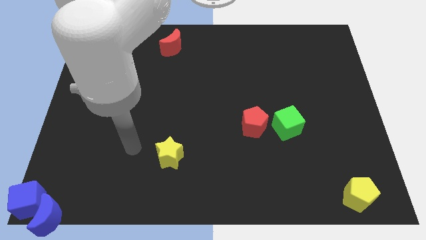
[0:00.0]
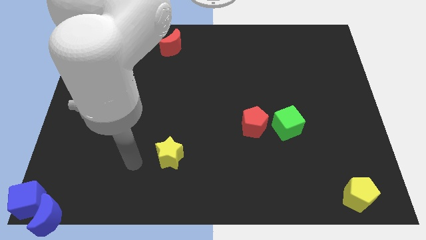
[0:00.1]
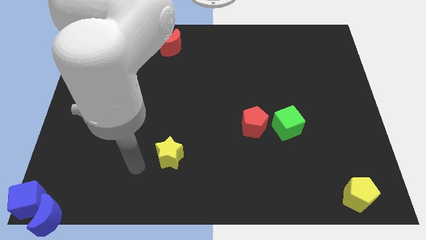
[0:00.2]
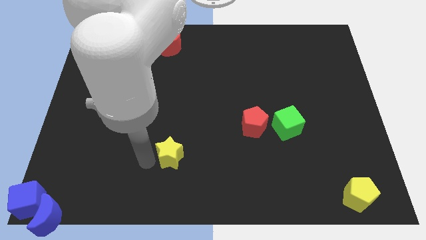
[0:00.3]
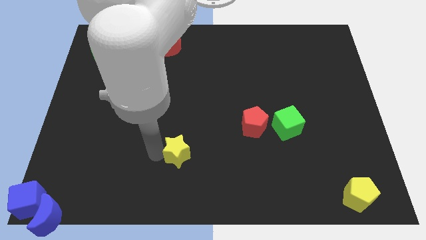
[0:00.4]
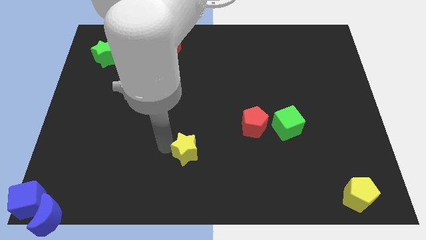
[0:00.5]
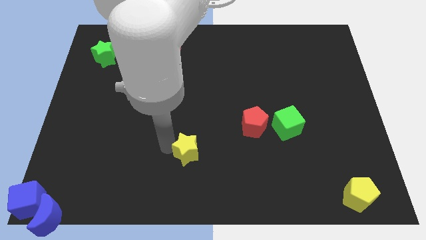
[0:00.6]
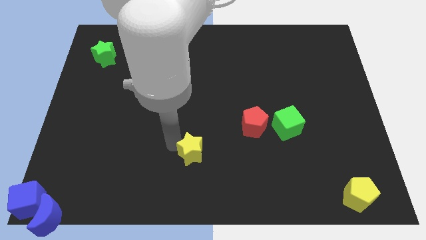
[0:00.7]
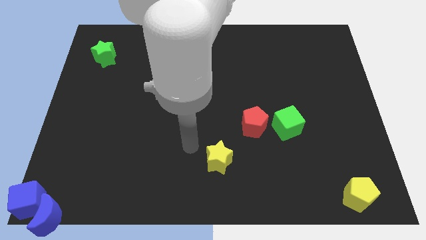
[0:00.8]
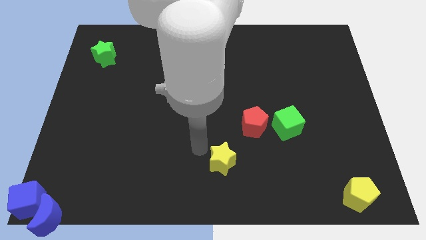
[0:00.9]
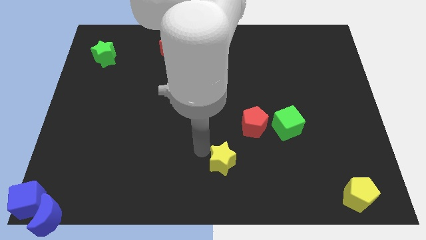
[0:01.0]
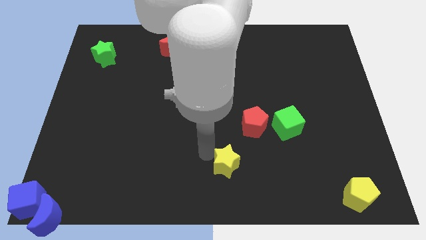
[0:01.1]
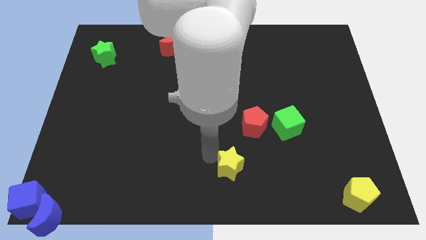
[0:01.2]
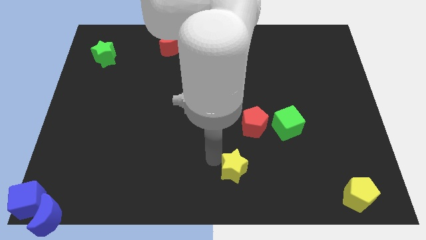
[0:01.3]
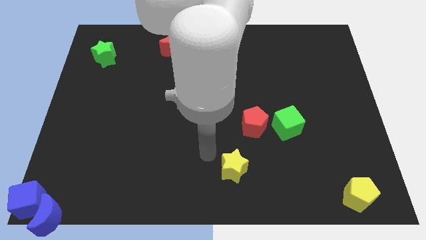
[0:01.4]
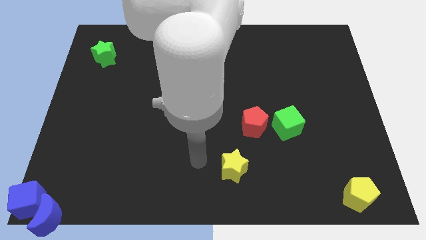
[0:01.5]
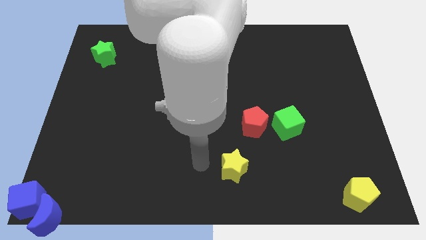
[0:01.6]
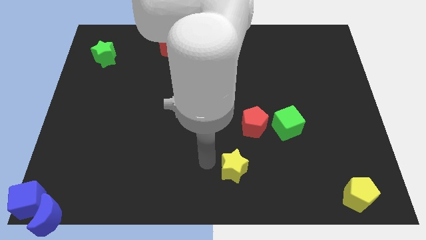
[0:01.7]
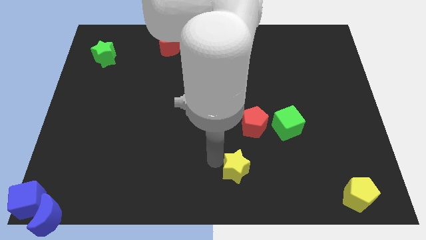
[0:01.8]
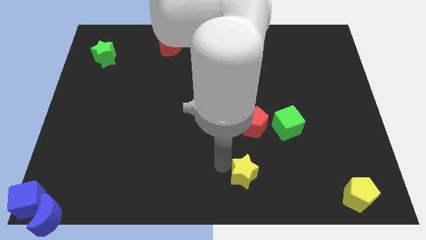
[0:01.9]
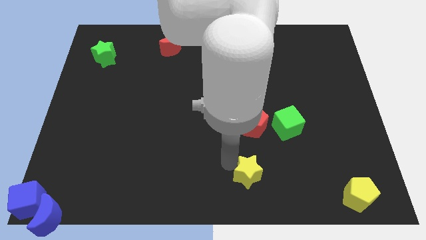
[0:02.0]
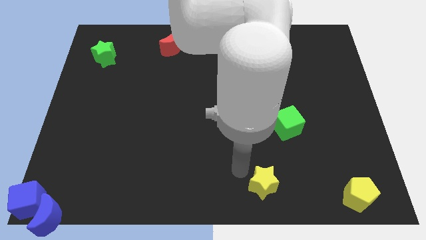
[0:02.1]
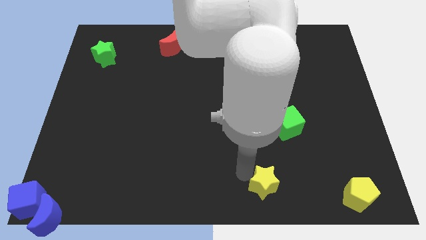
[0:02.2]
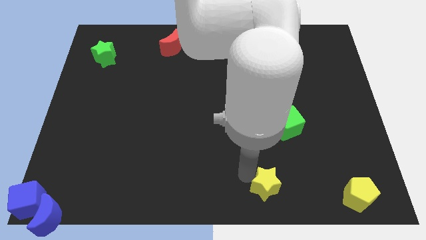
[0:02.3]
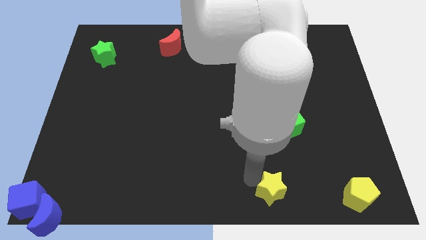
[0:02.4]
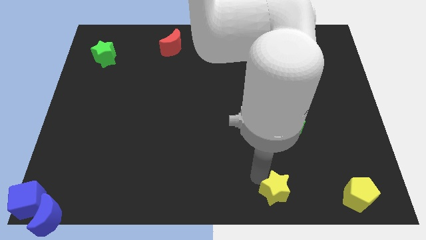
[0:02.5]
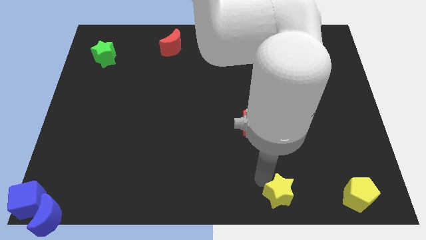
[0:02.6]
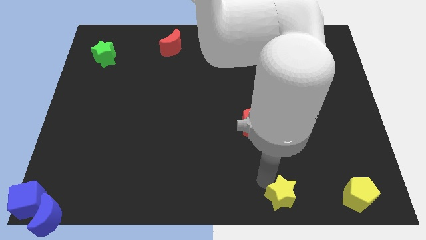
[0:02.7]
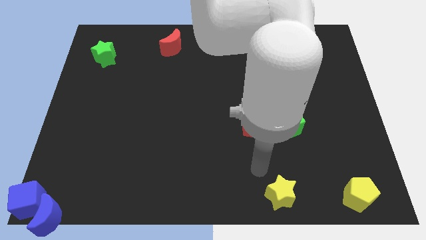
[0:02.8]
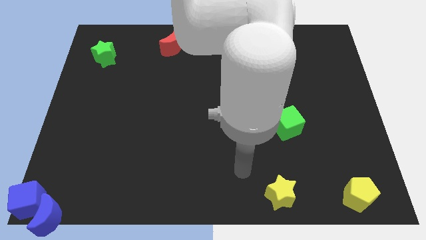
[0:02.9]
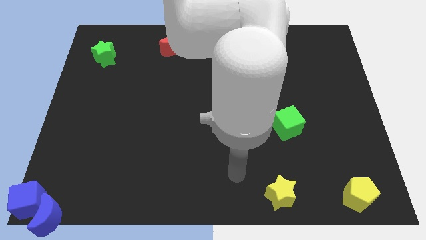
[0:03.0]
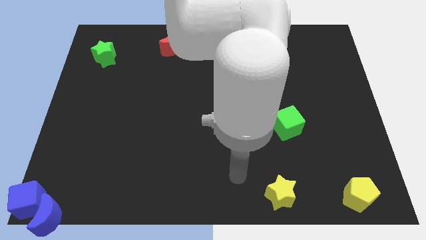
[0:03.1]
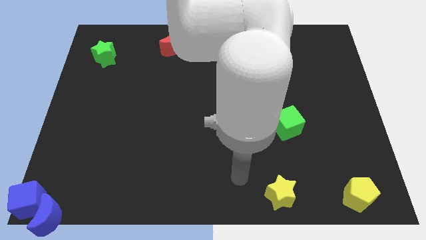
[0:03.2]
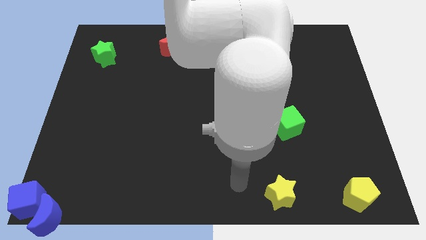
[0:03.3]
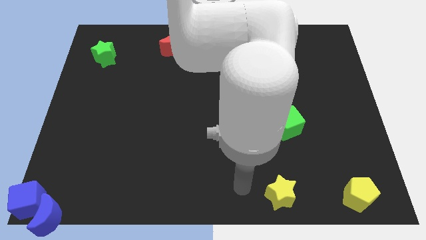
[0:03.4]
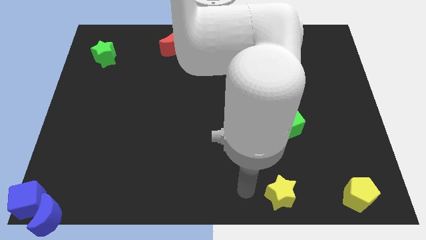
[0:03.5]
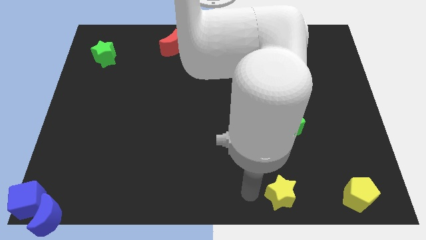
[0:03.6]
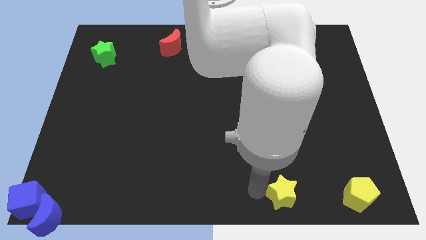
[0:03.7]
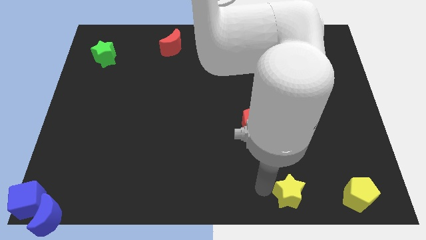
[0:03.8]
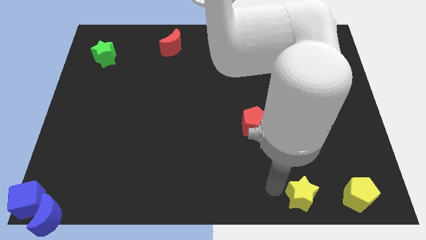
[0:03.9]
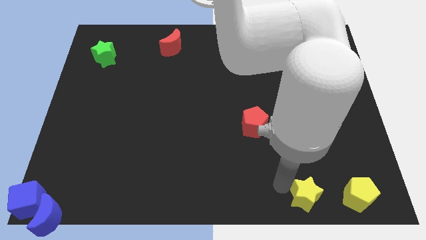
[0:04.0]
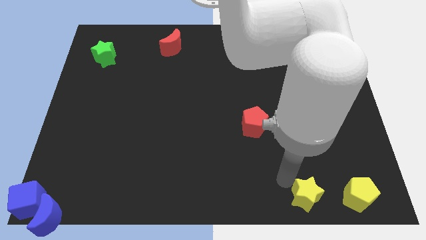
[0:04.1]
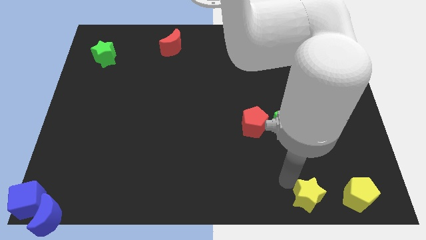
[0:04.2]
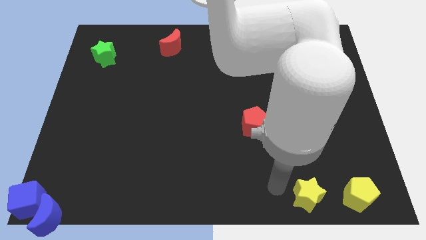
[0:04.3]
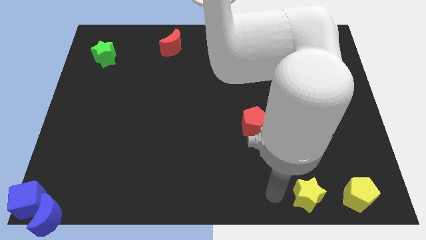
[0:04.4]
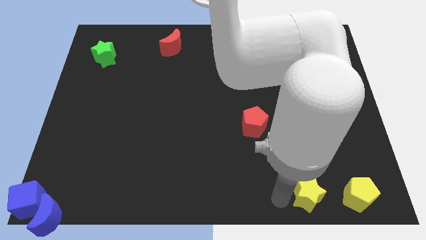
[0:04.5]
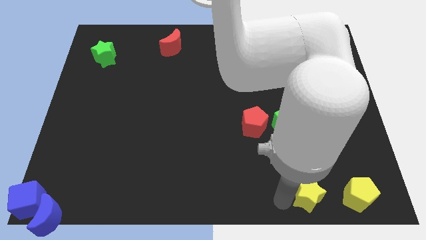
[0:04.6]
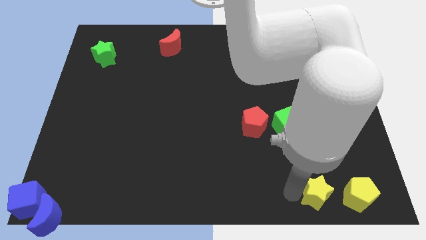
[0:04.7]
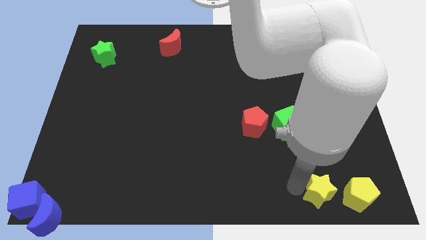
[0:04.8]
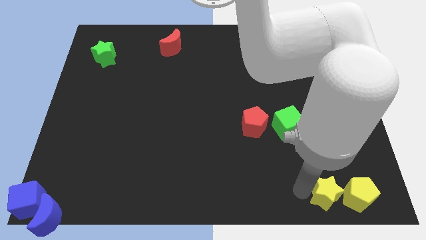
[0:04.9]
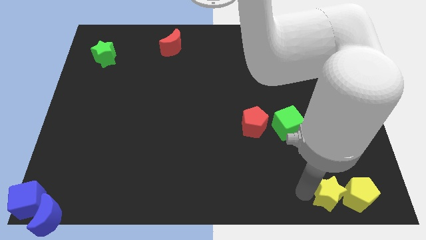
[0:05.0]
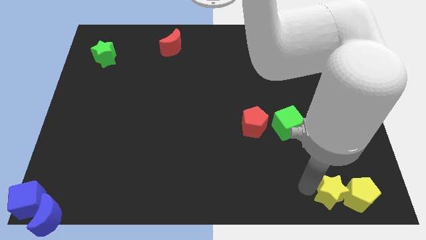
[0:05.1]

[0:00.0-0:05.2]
move the yellow star to the left of the yellow pentagon

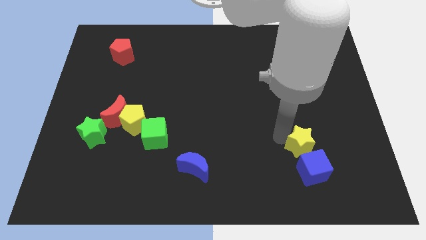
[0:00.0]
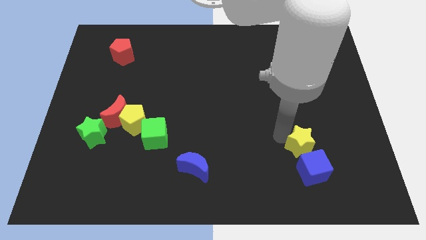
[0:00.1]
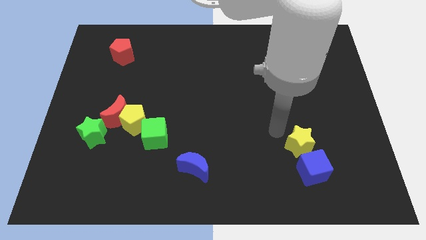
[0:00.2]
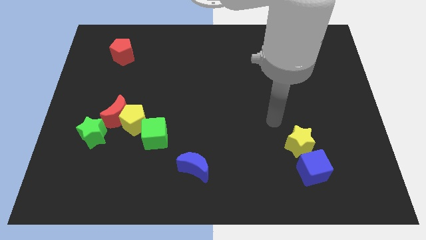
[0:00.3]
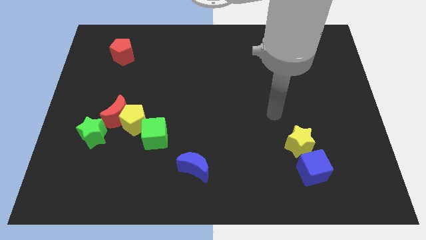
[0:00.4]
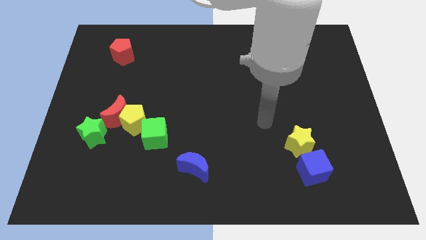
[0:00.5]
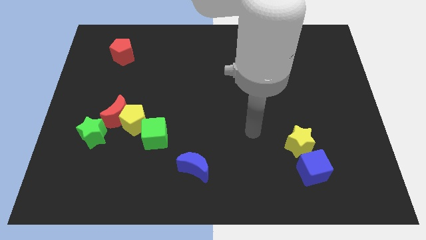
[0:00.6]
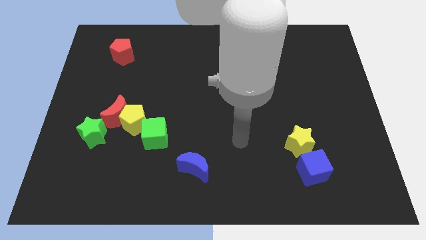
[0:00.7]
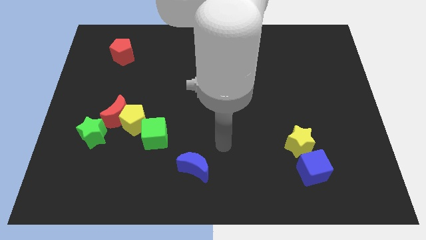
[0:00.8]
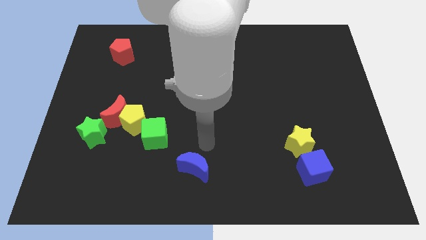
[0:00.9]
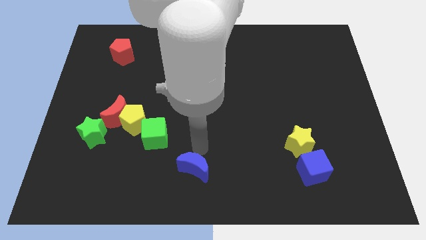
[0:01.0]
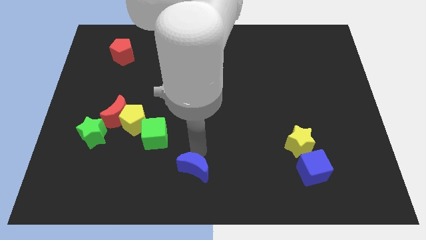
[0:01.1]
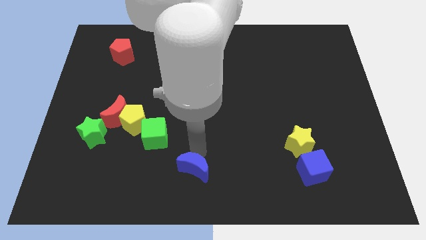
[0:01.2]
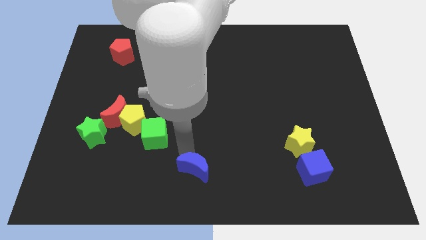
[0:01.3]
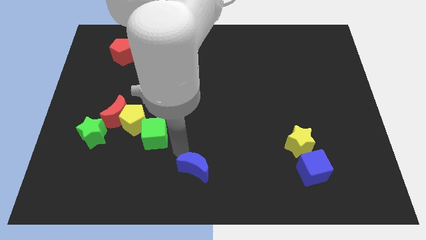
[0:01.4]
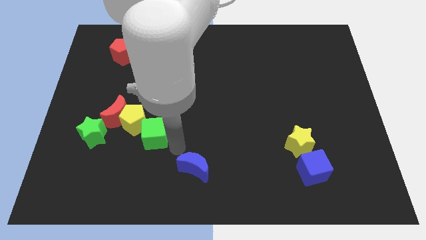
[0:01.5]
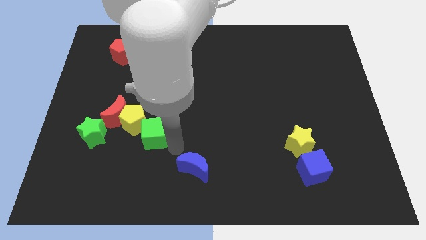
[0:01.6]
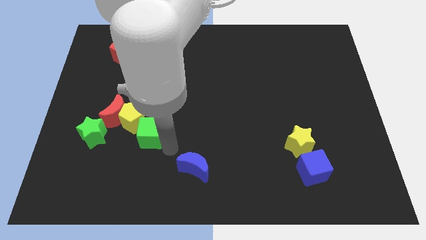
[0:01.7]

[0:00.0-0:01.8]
move the arm away from the yellow star

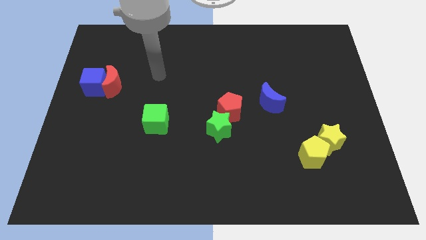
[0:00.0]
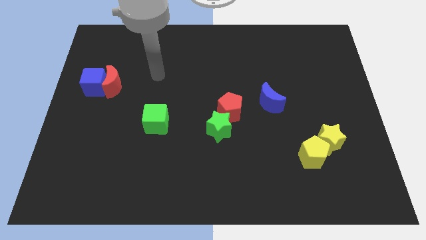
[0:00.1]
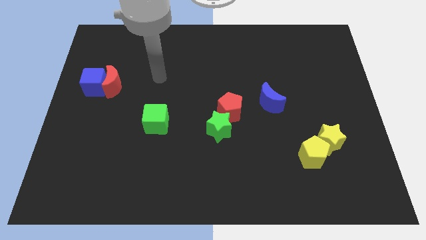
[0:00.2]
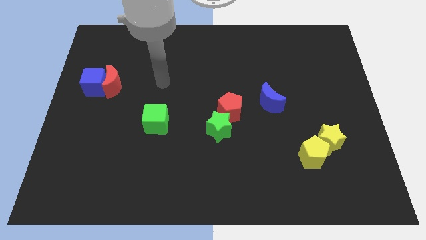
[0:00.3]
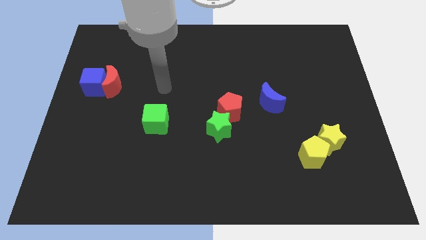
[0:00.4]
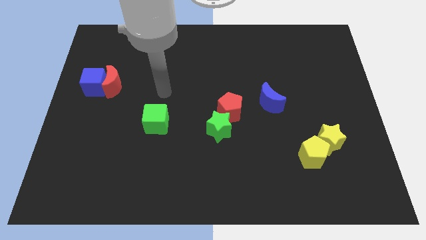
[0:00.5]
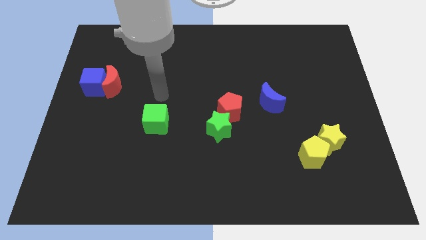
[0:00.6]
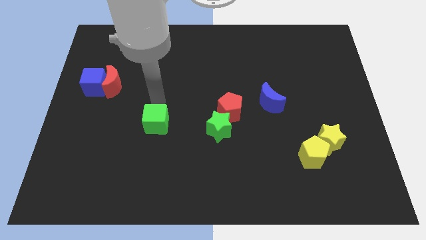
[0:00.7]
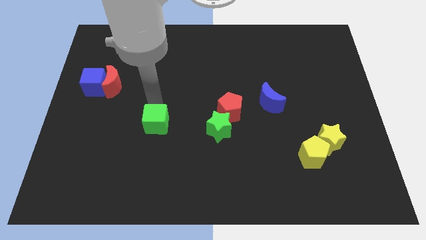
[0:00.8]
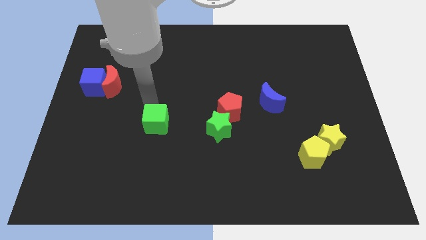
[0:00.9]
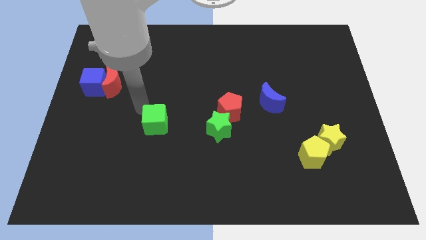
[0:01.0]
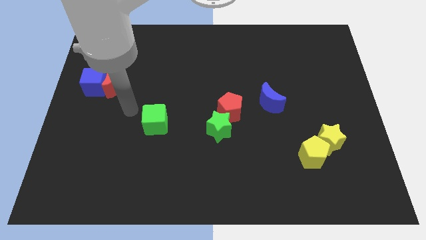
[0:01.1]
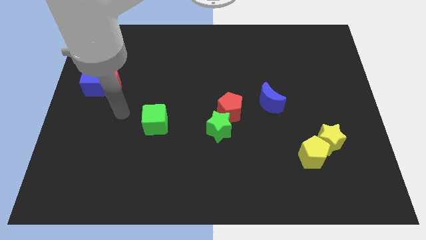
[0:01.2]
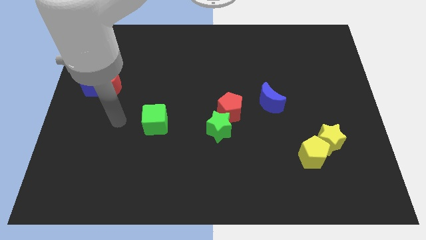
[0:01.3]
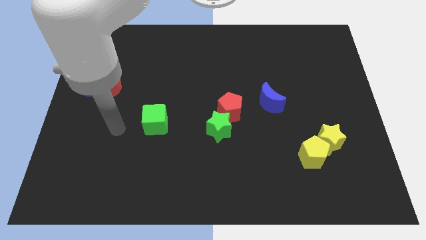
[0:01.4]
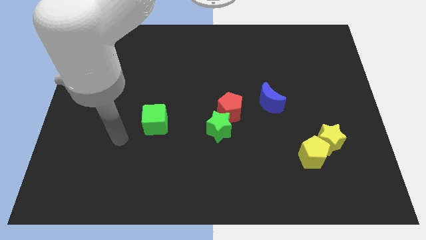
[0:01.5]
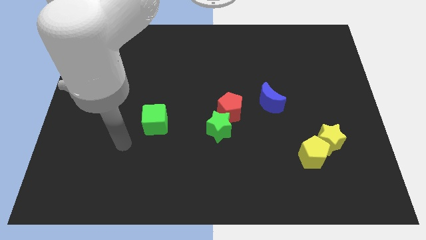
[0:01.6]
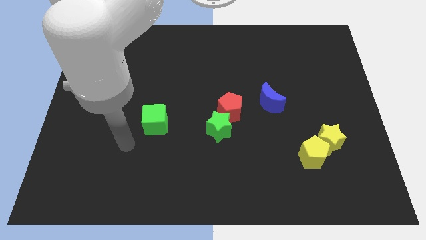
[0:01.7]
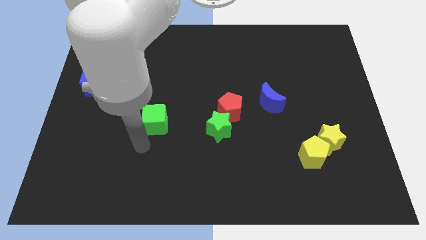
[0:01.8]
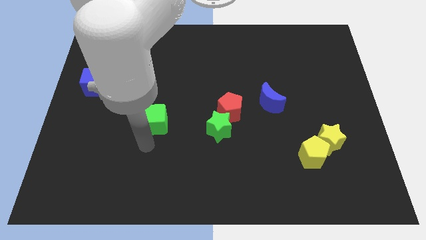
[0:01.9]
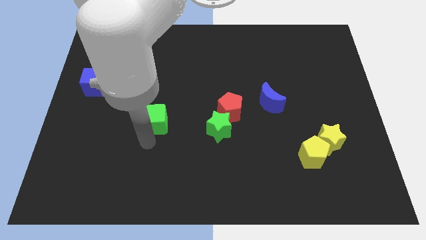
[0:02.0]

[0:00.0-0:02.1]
move your arm to the bottom side of the green cube
